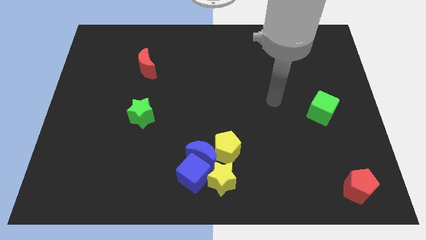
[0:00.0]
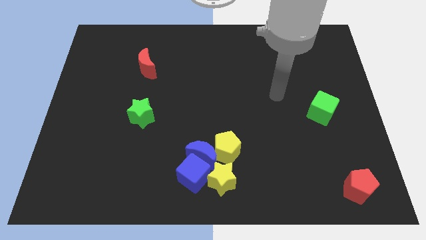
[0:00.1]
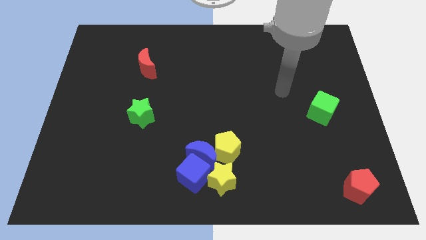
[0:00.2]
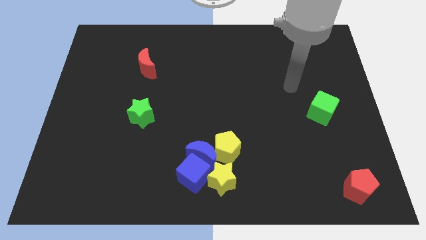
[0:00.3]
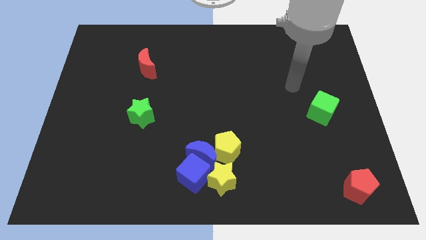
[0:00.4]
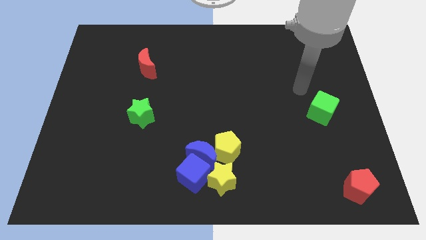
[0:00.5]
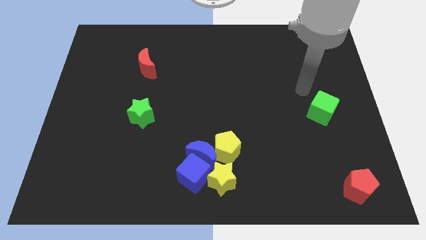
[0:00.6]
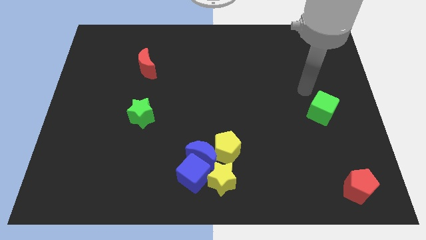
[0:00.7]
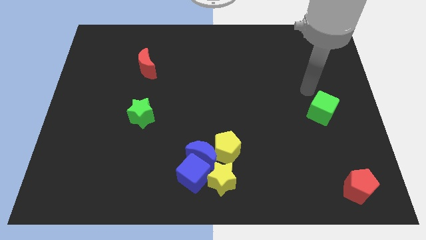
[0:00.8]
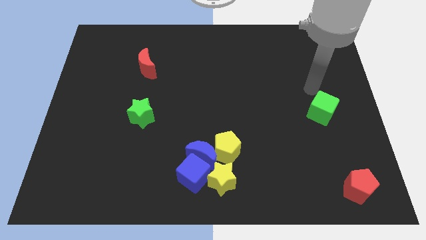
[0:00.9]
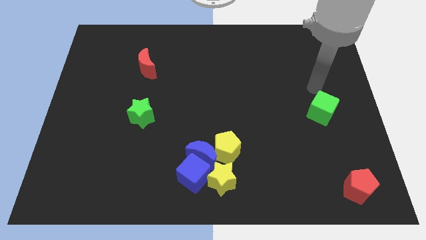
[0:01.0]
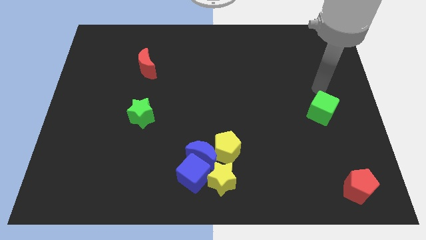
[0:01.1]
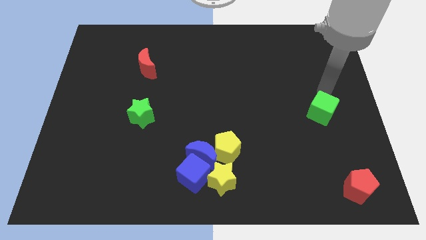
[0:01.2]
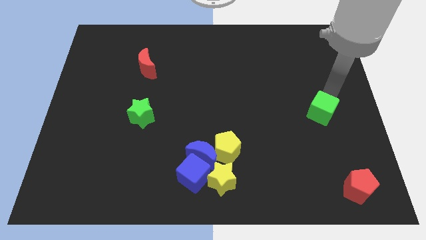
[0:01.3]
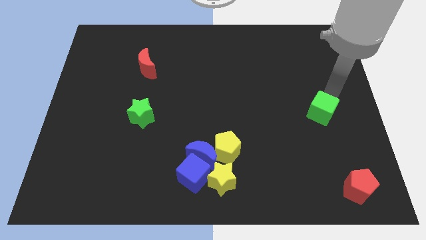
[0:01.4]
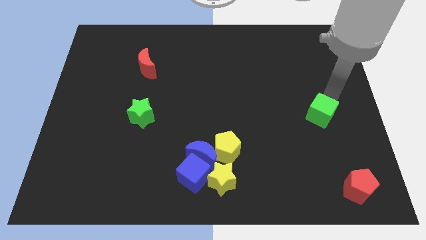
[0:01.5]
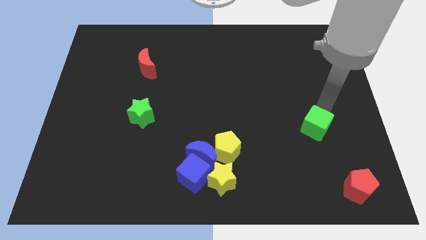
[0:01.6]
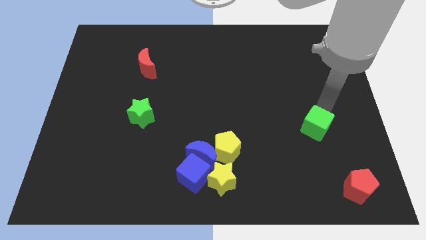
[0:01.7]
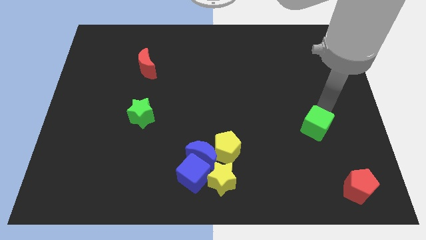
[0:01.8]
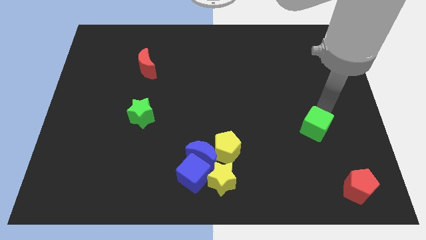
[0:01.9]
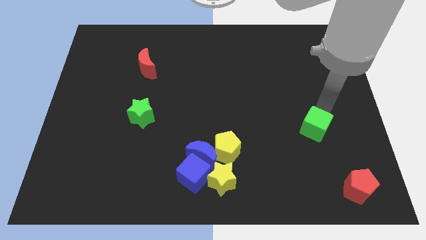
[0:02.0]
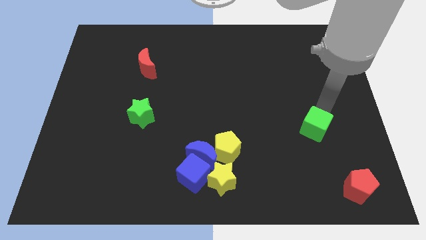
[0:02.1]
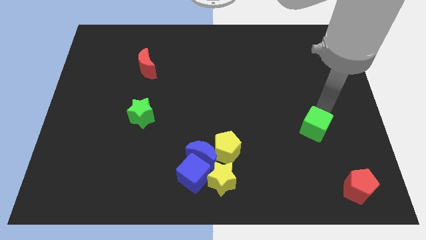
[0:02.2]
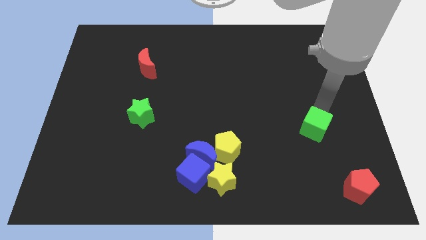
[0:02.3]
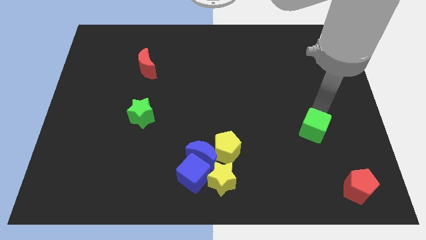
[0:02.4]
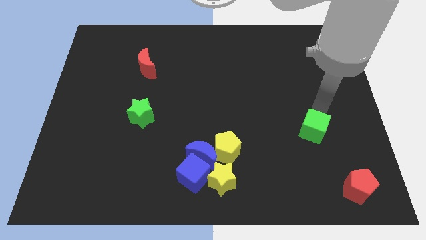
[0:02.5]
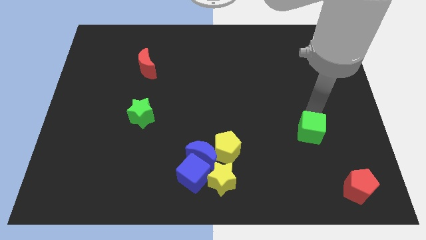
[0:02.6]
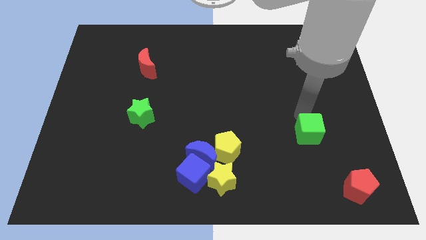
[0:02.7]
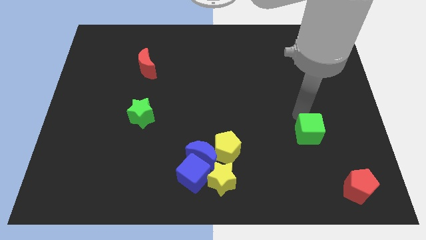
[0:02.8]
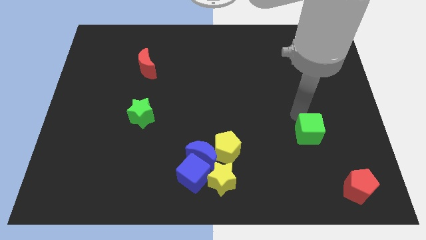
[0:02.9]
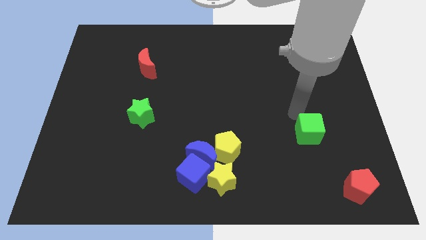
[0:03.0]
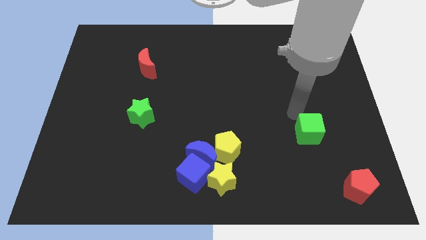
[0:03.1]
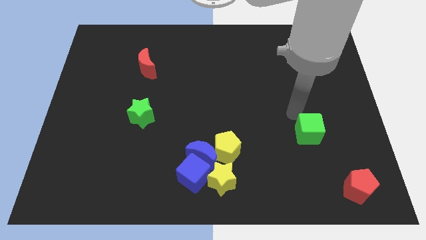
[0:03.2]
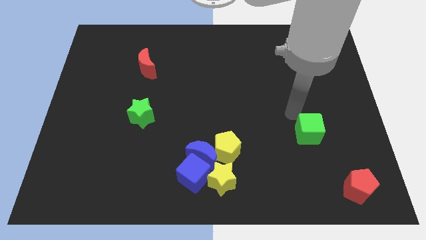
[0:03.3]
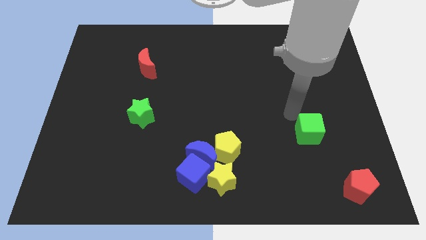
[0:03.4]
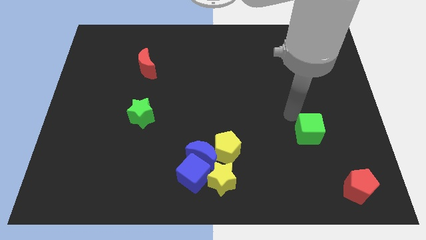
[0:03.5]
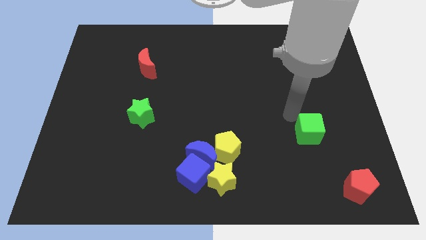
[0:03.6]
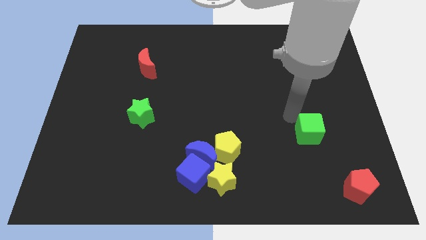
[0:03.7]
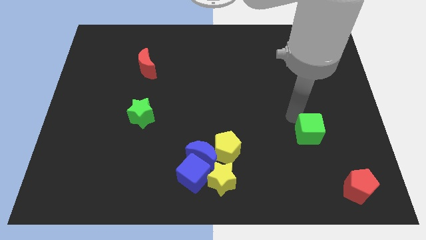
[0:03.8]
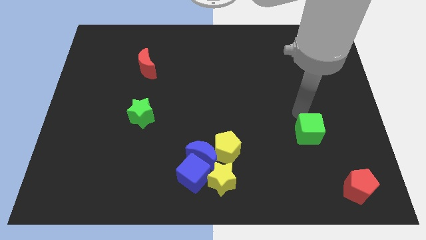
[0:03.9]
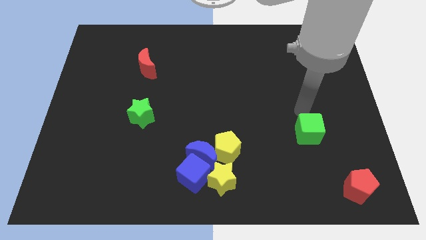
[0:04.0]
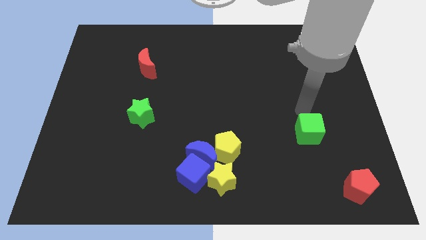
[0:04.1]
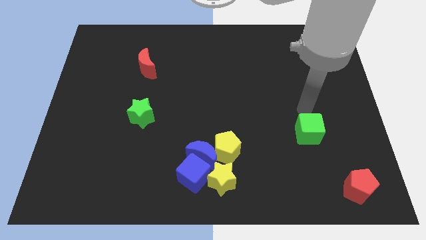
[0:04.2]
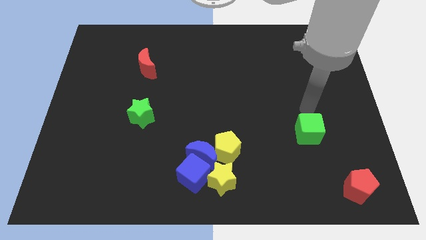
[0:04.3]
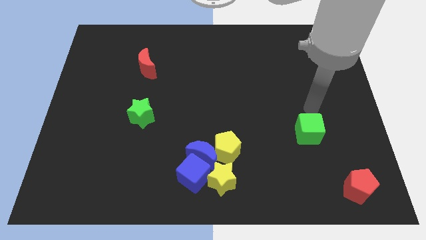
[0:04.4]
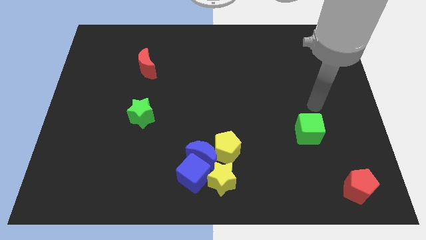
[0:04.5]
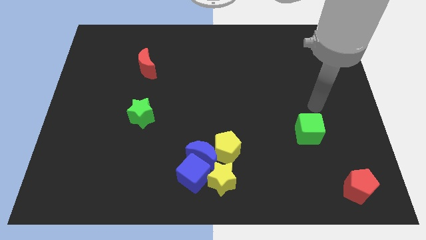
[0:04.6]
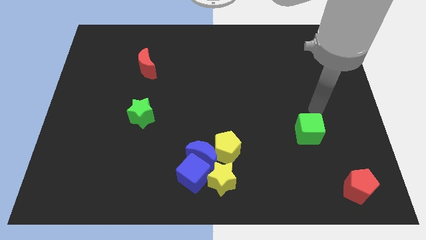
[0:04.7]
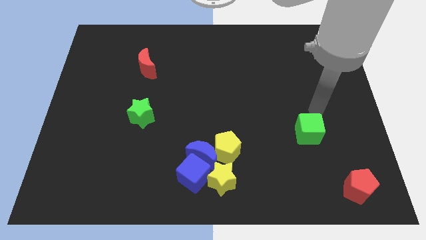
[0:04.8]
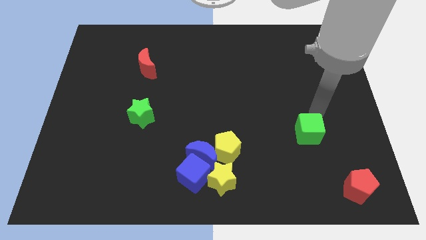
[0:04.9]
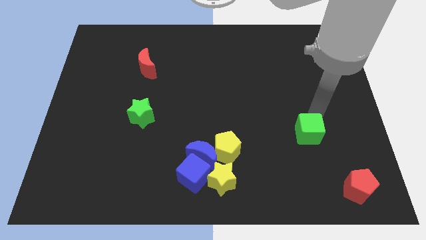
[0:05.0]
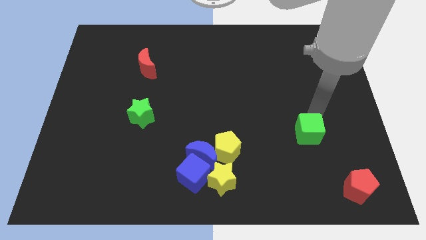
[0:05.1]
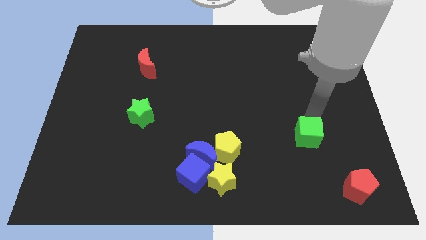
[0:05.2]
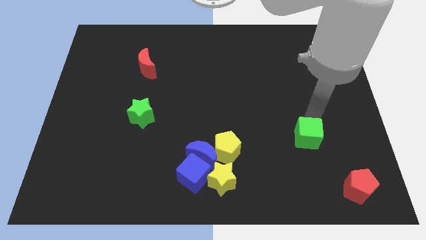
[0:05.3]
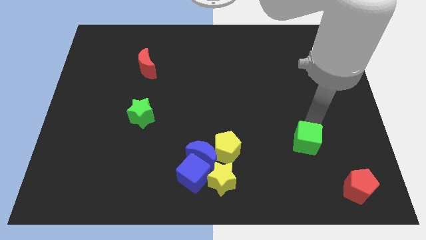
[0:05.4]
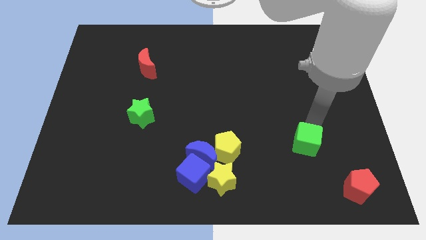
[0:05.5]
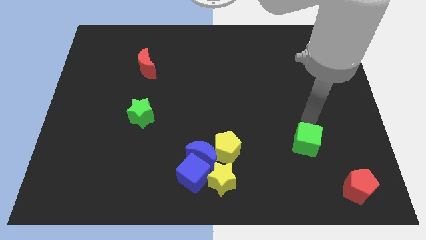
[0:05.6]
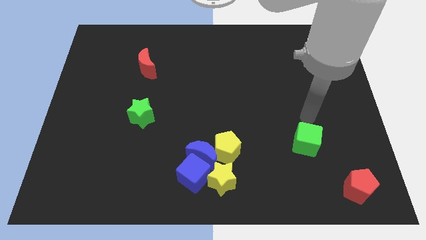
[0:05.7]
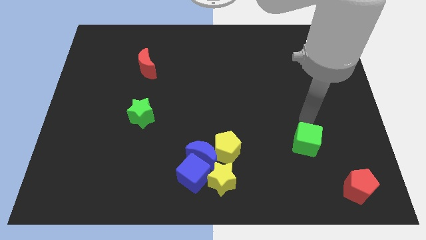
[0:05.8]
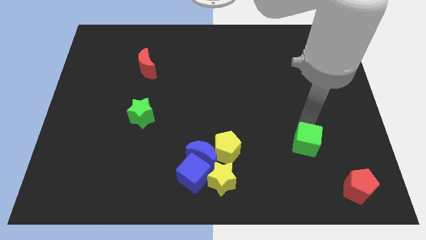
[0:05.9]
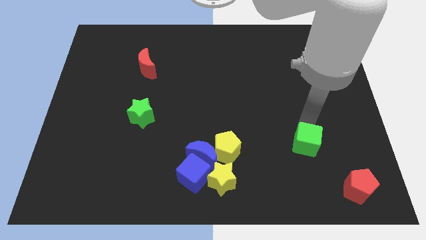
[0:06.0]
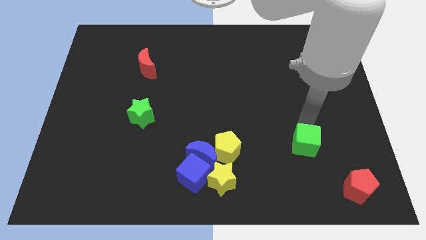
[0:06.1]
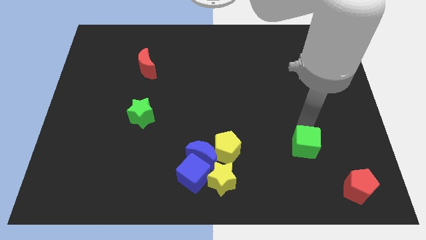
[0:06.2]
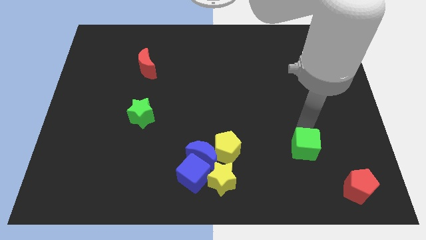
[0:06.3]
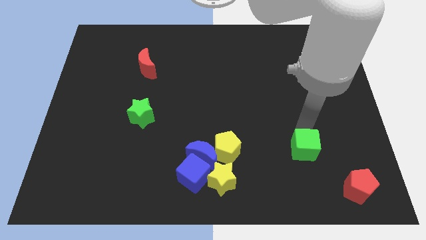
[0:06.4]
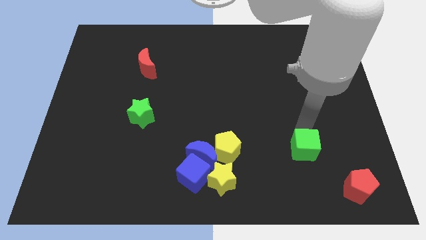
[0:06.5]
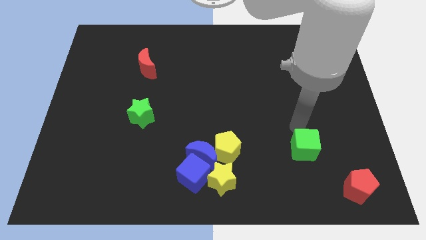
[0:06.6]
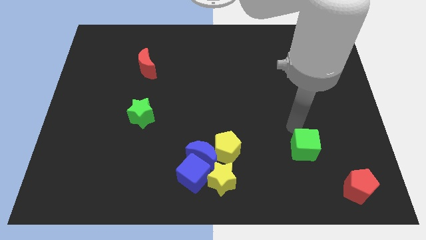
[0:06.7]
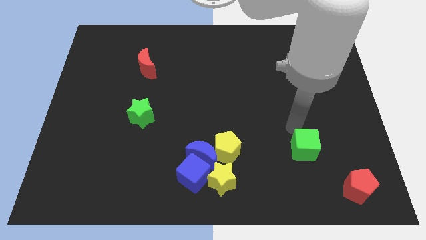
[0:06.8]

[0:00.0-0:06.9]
put the green cube to the right of the yellow pentagon

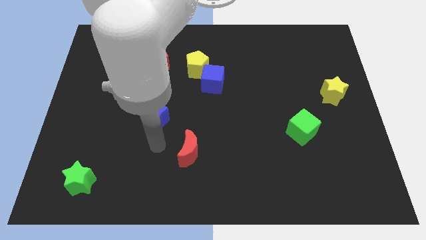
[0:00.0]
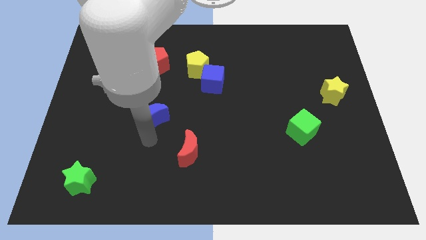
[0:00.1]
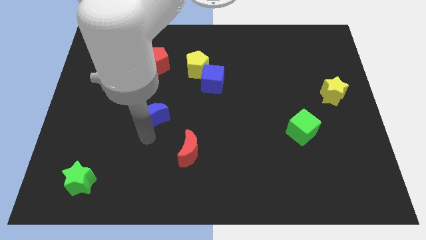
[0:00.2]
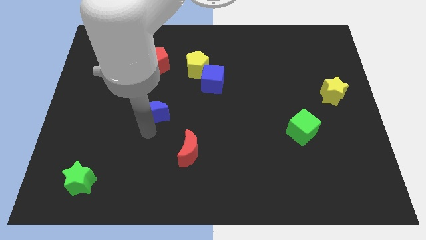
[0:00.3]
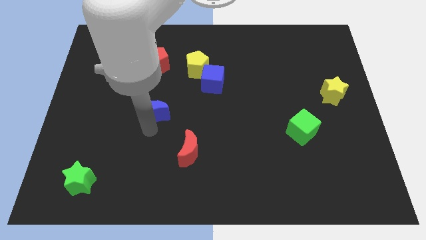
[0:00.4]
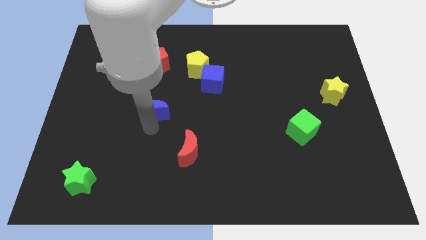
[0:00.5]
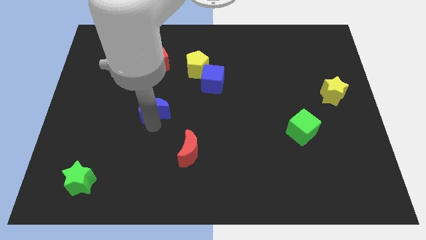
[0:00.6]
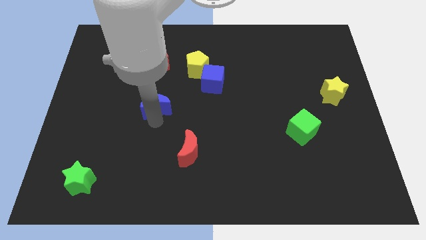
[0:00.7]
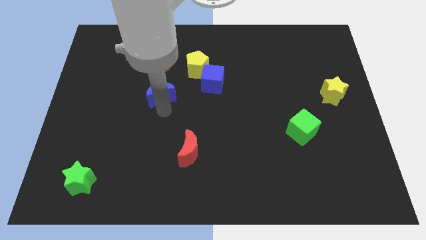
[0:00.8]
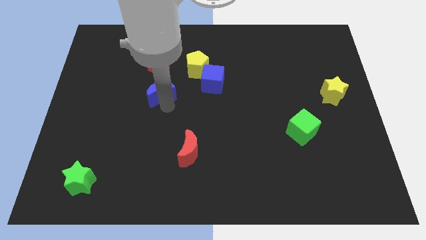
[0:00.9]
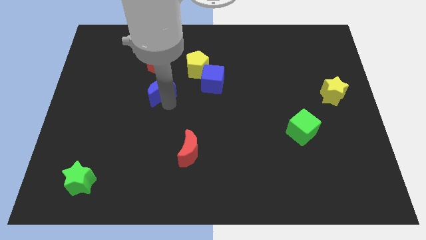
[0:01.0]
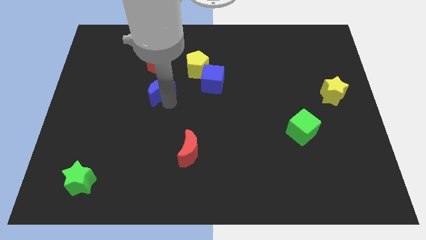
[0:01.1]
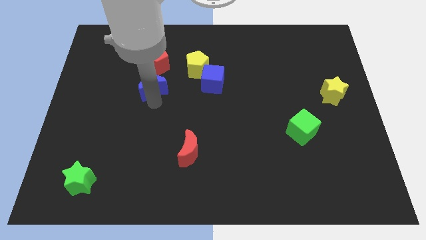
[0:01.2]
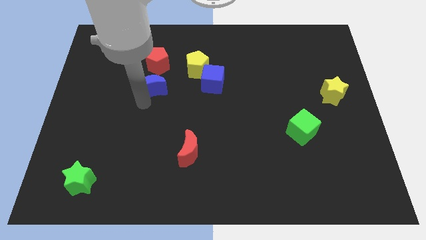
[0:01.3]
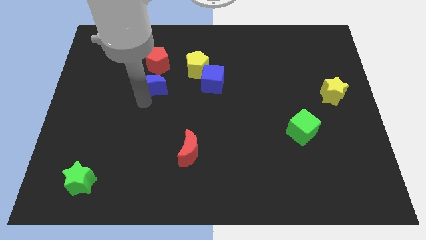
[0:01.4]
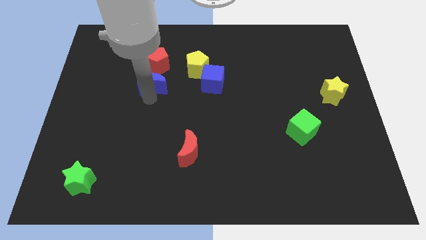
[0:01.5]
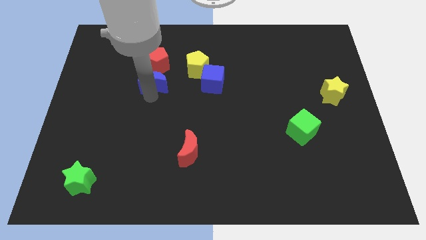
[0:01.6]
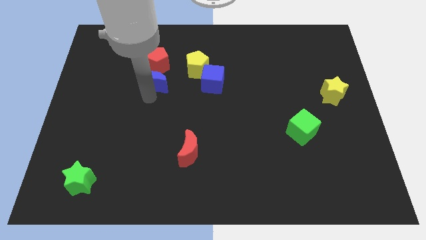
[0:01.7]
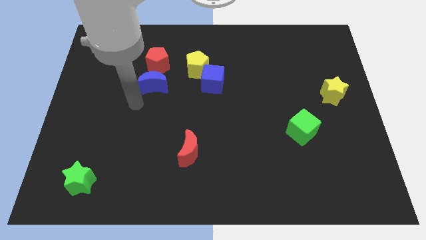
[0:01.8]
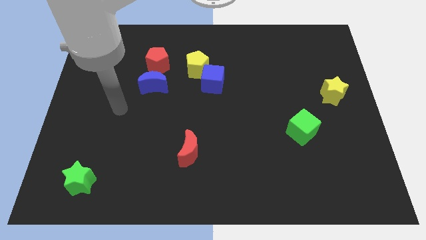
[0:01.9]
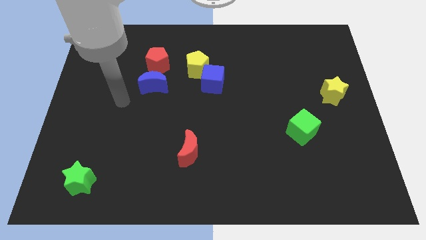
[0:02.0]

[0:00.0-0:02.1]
place blue moon below the red pentagon
